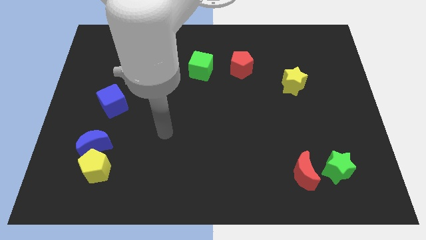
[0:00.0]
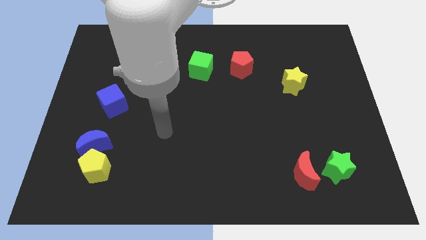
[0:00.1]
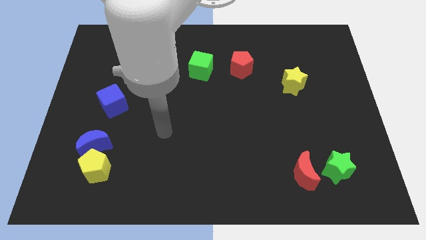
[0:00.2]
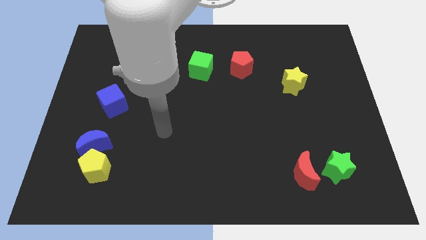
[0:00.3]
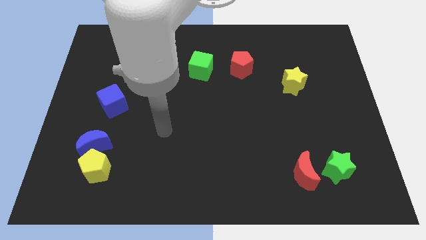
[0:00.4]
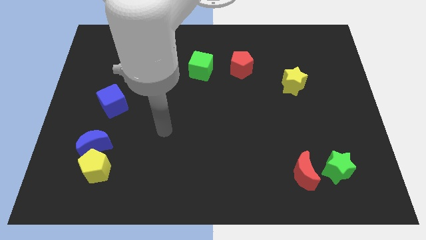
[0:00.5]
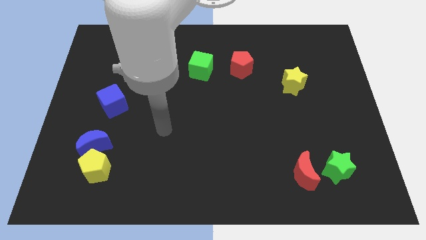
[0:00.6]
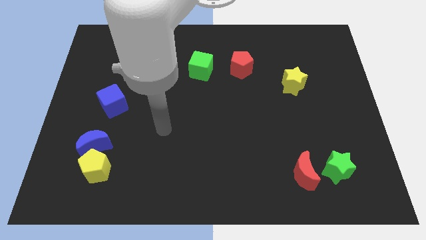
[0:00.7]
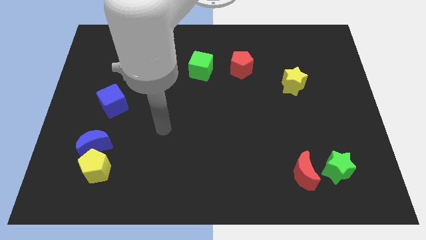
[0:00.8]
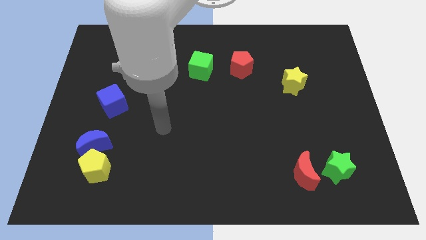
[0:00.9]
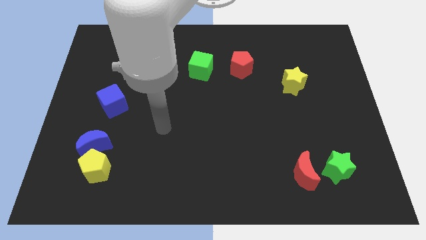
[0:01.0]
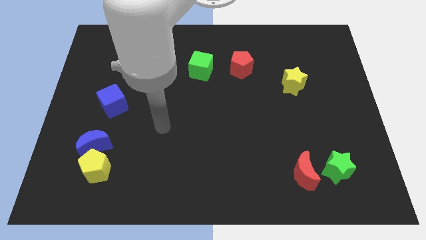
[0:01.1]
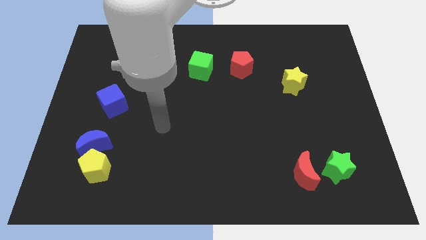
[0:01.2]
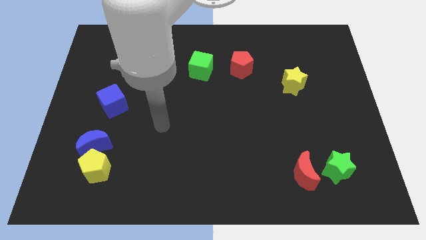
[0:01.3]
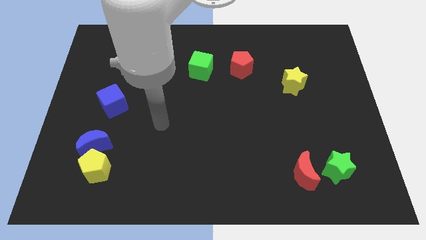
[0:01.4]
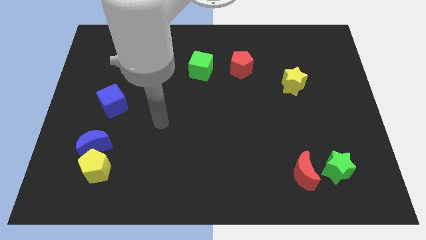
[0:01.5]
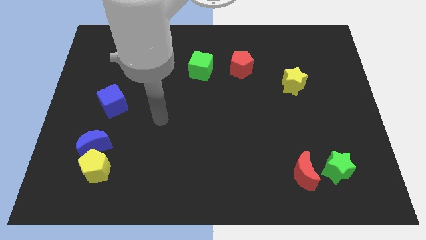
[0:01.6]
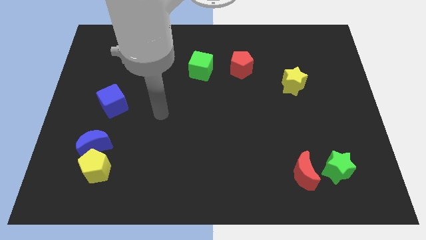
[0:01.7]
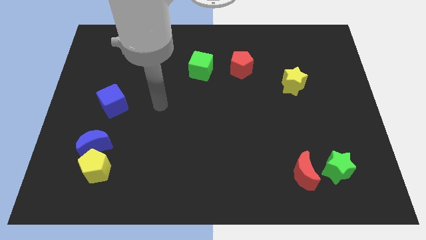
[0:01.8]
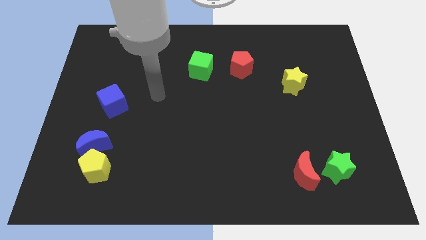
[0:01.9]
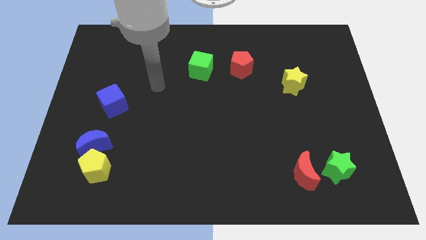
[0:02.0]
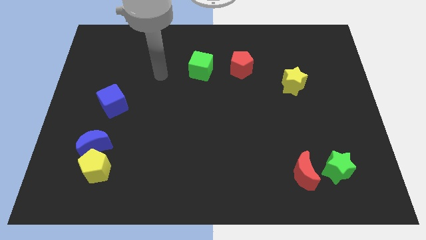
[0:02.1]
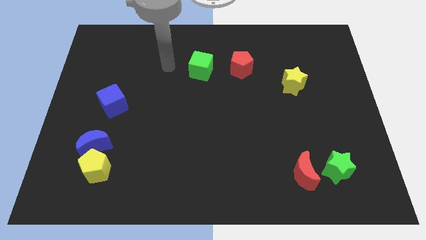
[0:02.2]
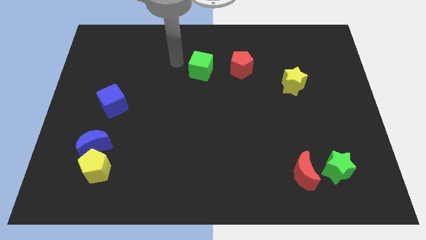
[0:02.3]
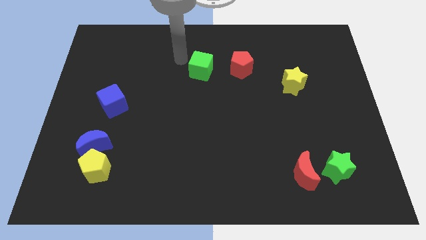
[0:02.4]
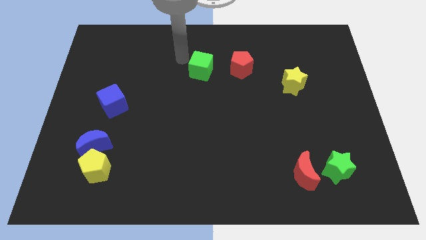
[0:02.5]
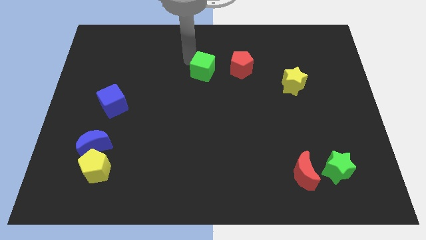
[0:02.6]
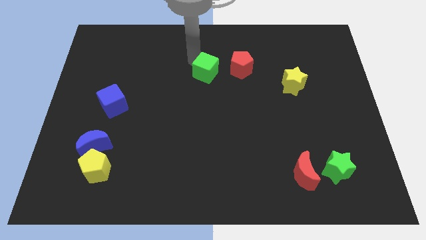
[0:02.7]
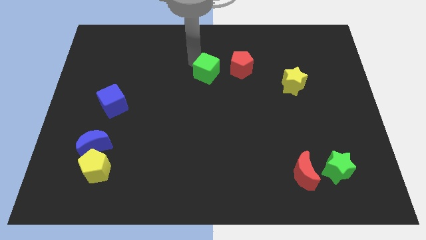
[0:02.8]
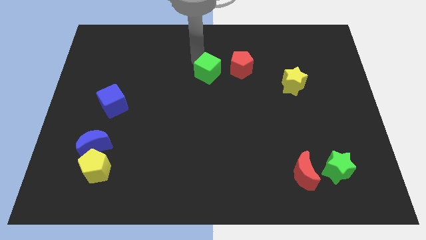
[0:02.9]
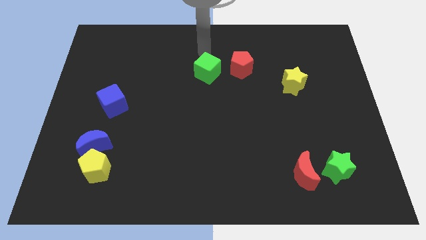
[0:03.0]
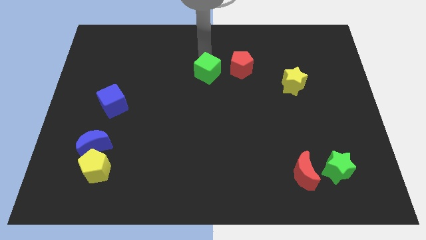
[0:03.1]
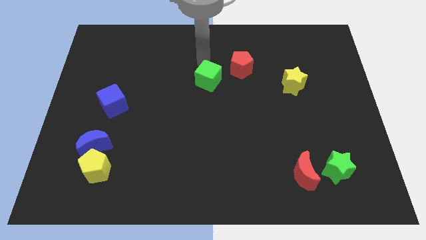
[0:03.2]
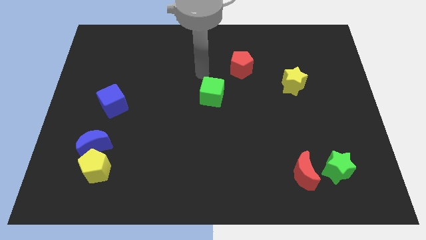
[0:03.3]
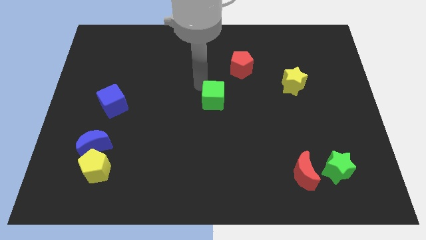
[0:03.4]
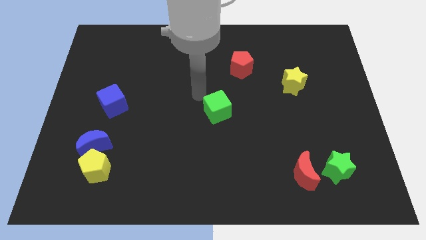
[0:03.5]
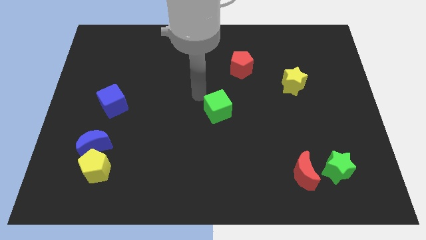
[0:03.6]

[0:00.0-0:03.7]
push green cube slightly towards down

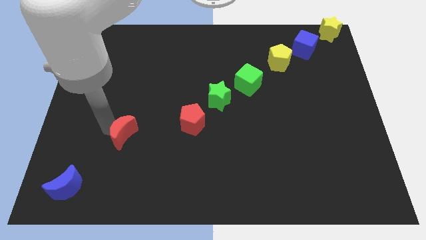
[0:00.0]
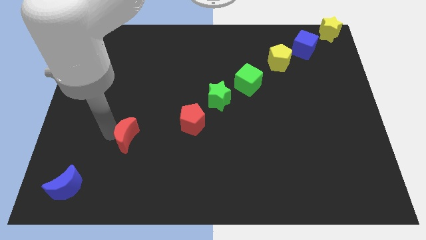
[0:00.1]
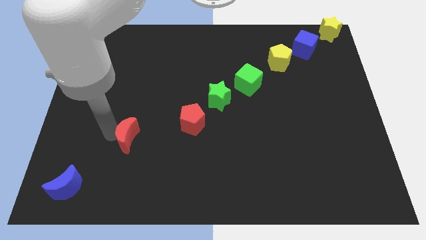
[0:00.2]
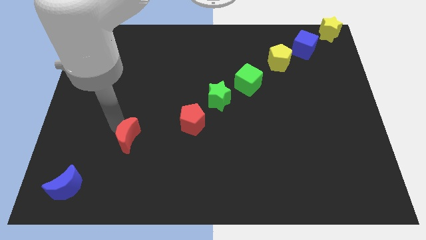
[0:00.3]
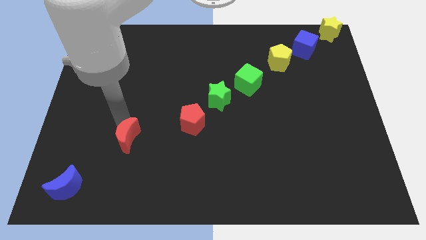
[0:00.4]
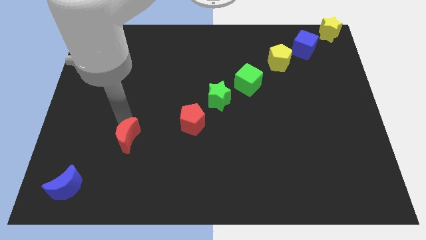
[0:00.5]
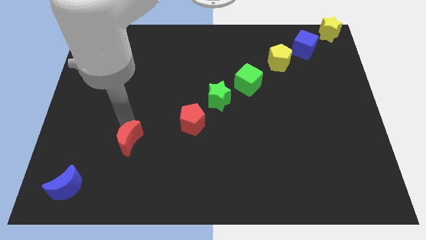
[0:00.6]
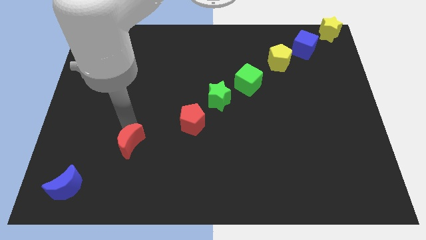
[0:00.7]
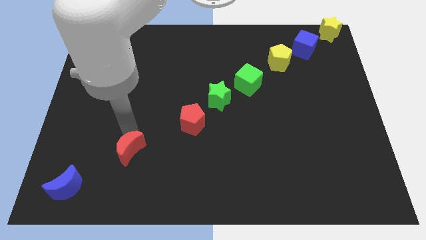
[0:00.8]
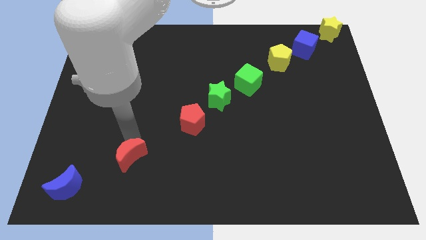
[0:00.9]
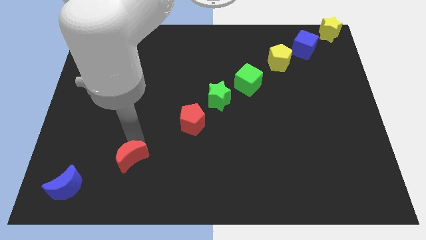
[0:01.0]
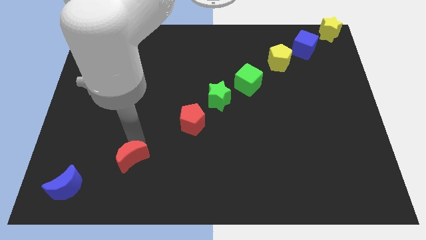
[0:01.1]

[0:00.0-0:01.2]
place red moon in between red pentagon and blue moon

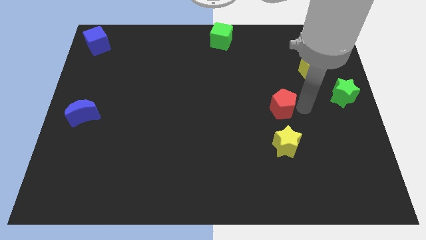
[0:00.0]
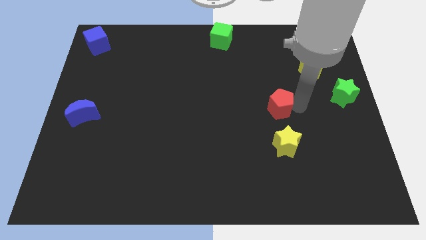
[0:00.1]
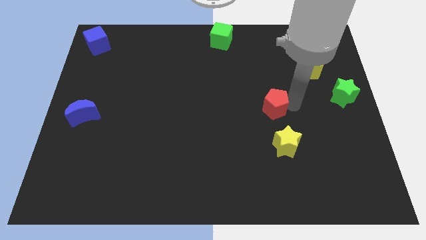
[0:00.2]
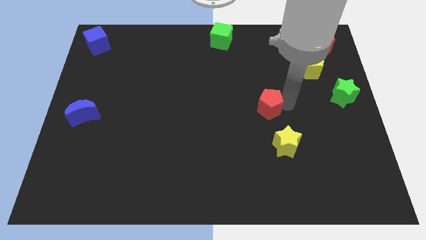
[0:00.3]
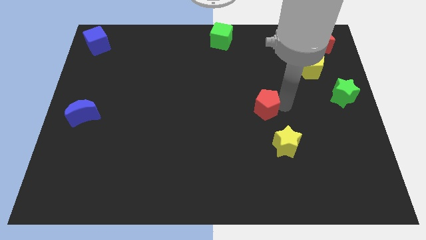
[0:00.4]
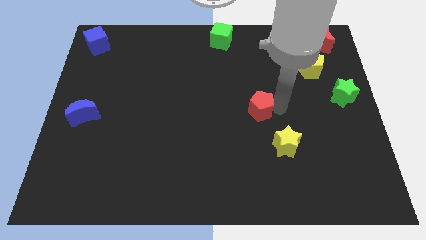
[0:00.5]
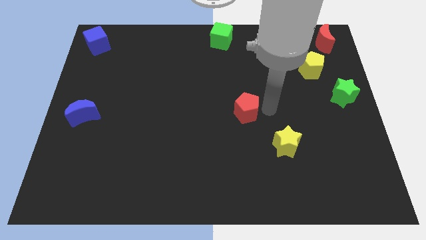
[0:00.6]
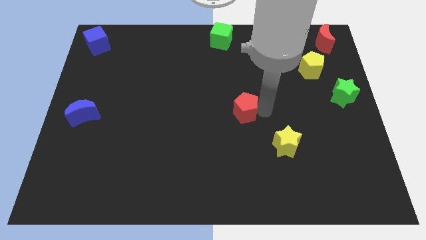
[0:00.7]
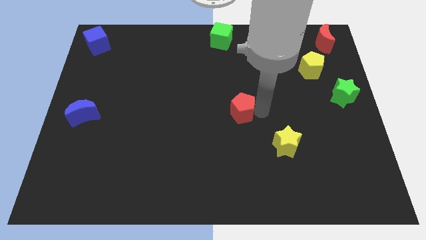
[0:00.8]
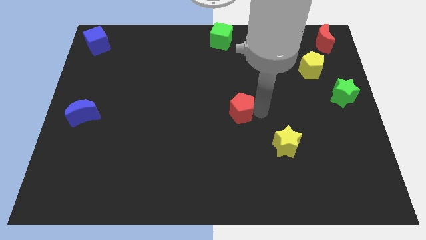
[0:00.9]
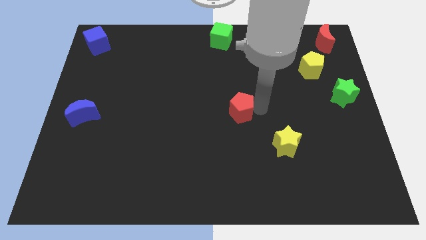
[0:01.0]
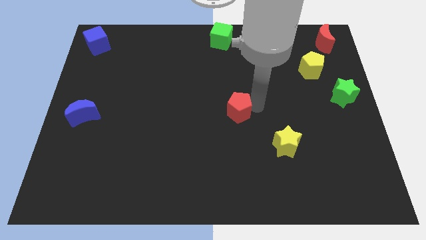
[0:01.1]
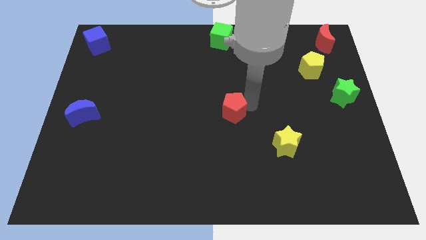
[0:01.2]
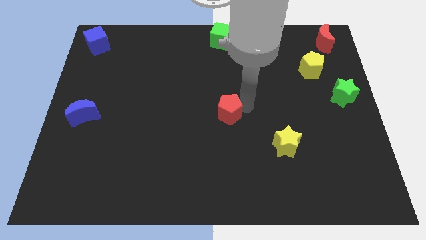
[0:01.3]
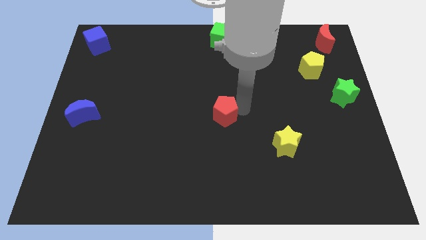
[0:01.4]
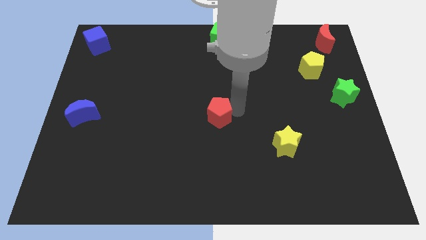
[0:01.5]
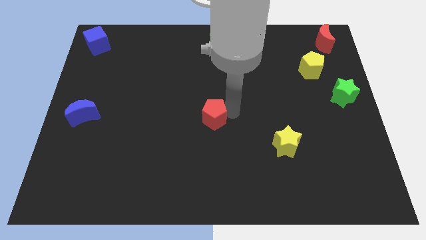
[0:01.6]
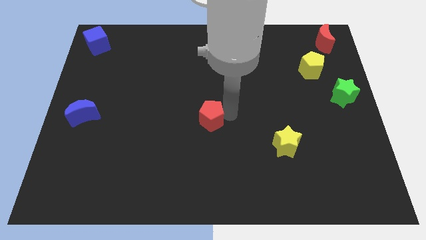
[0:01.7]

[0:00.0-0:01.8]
place the red pentagon at the center of the board

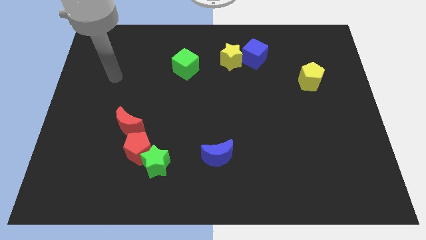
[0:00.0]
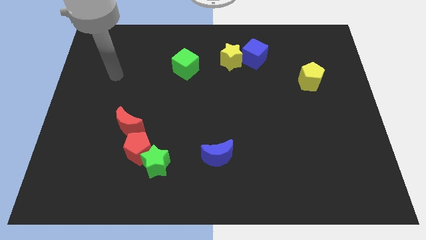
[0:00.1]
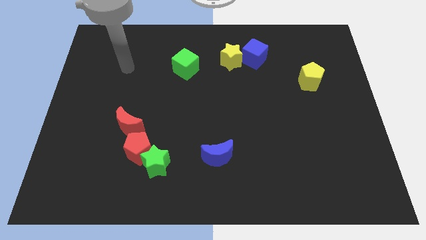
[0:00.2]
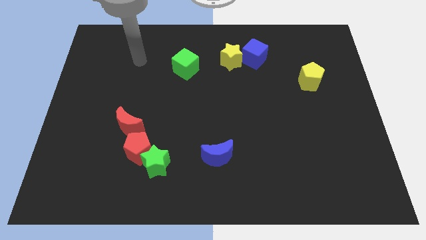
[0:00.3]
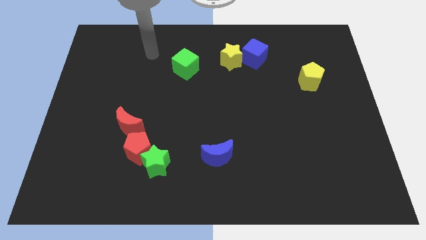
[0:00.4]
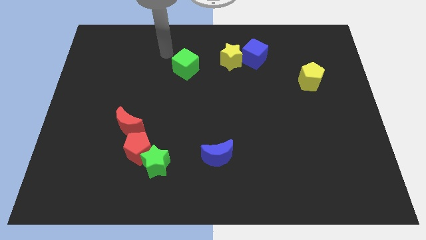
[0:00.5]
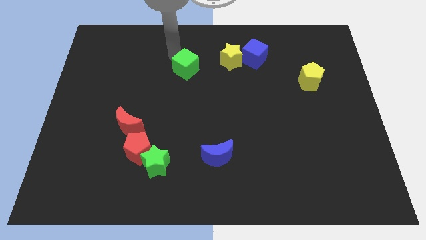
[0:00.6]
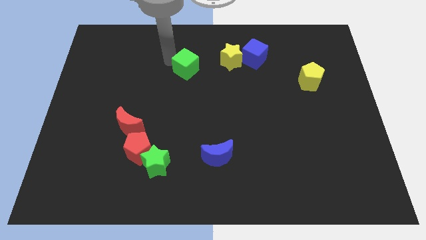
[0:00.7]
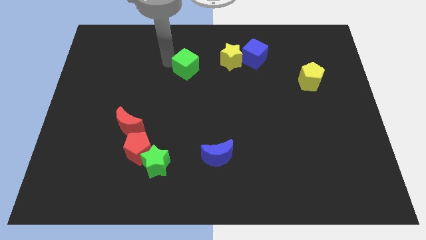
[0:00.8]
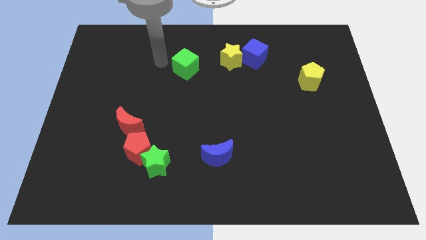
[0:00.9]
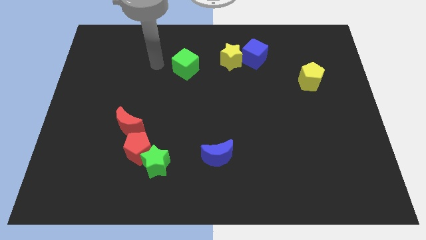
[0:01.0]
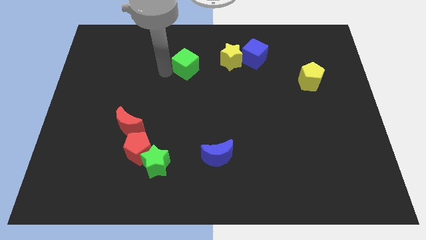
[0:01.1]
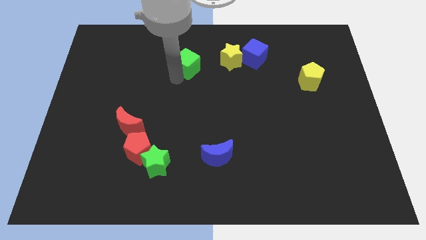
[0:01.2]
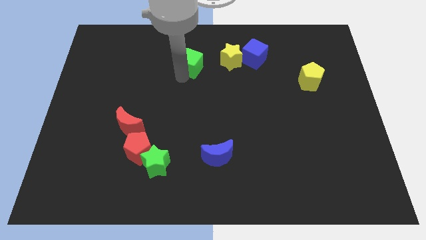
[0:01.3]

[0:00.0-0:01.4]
touch the left side of the green cube

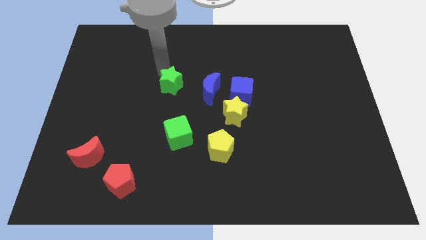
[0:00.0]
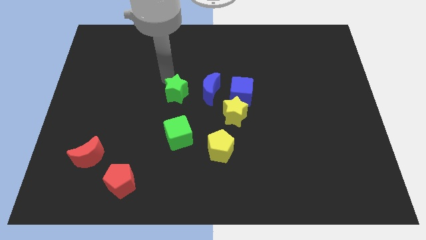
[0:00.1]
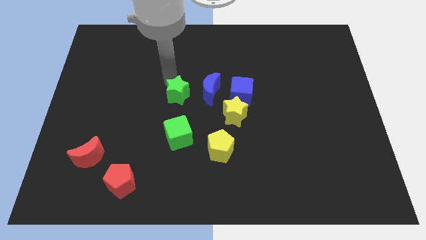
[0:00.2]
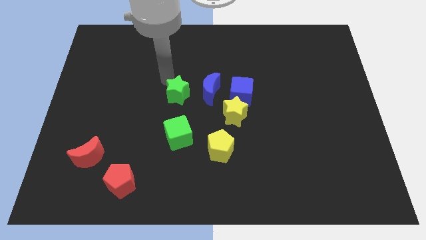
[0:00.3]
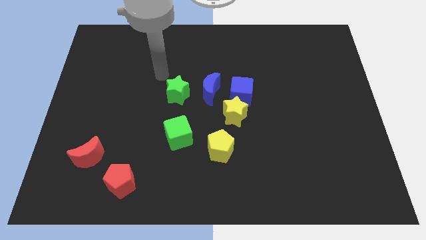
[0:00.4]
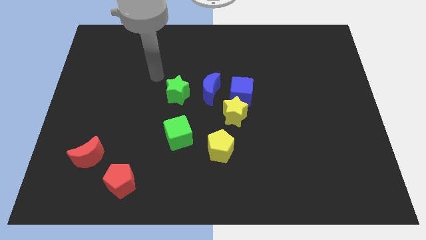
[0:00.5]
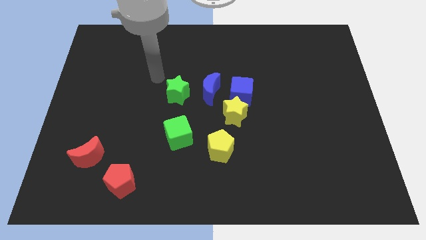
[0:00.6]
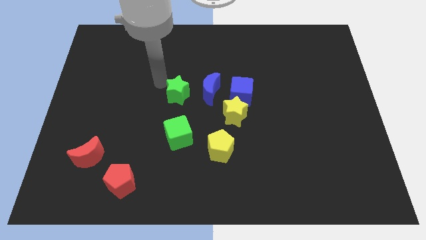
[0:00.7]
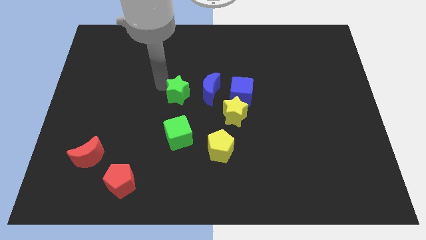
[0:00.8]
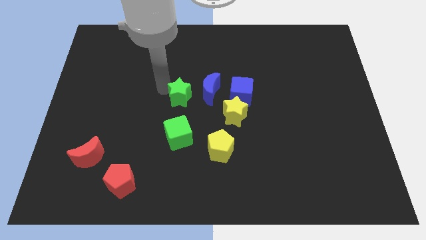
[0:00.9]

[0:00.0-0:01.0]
place the green star to the left of the blue moon

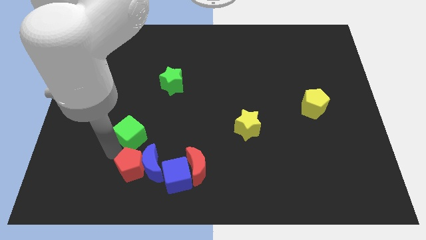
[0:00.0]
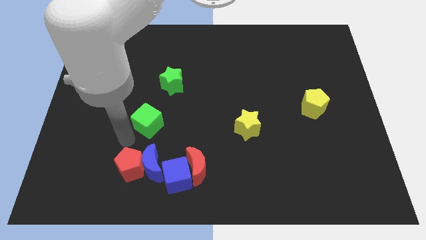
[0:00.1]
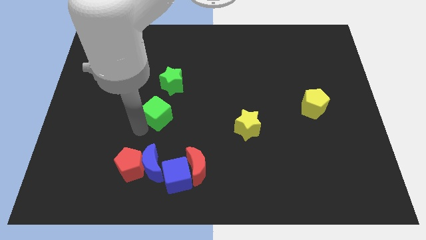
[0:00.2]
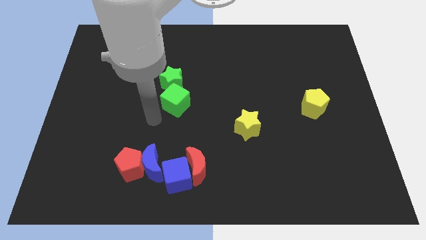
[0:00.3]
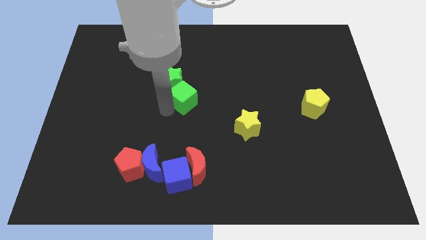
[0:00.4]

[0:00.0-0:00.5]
push green cube below green star
